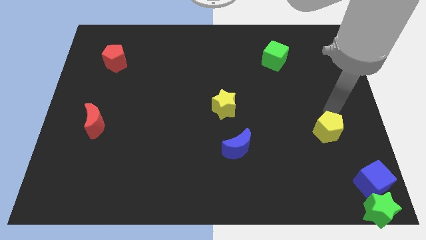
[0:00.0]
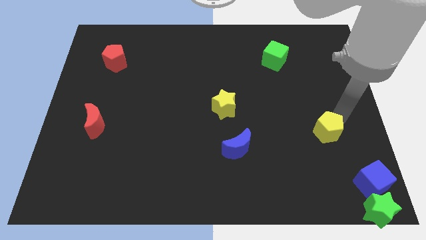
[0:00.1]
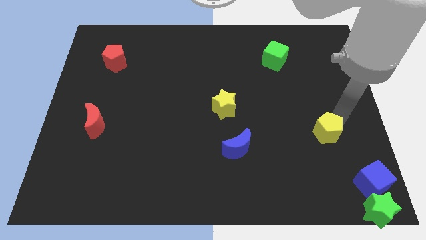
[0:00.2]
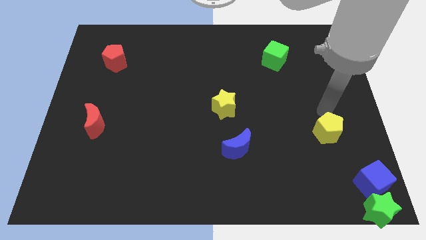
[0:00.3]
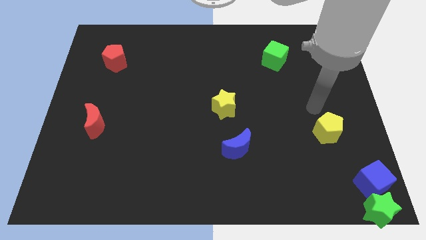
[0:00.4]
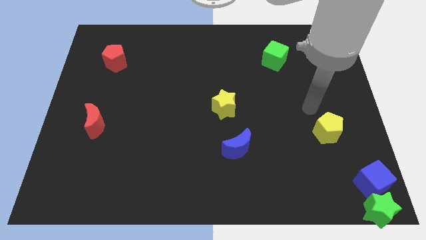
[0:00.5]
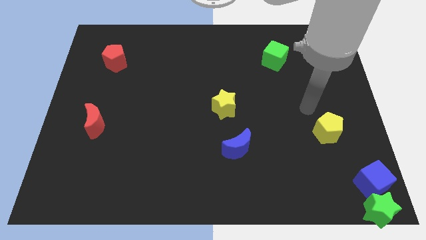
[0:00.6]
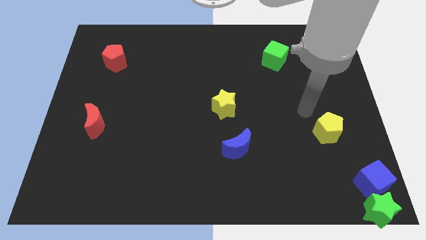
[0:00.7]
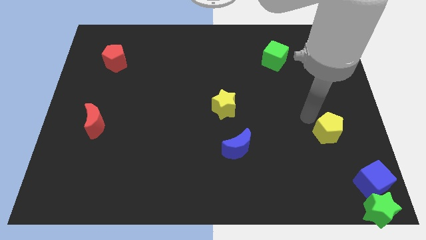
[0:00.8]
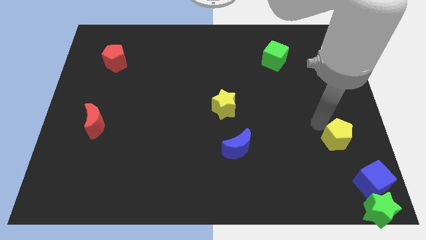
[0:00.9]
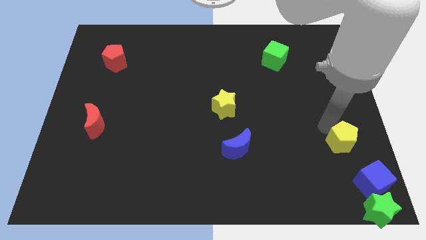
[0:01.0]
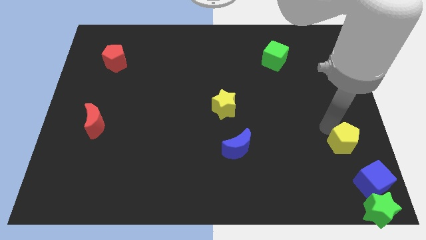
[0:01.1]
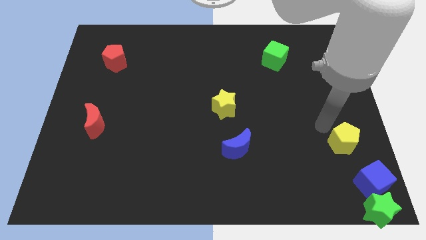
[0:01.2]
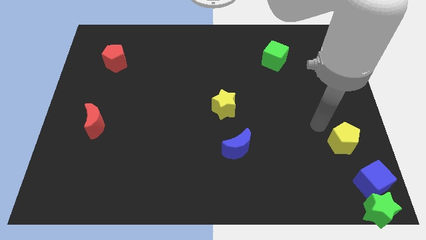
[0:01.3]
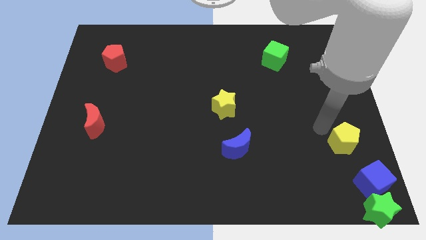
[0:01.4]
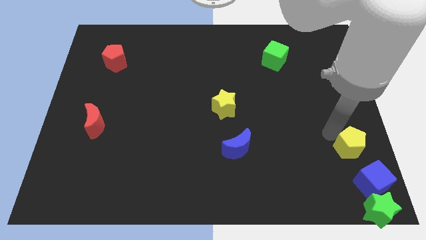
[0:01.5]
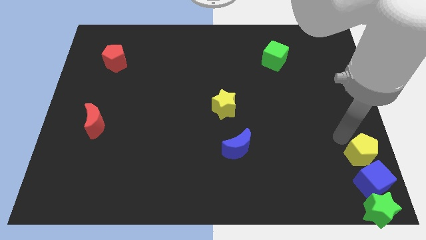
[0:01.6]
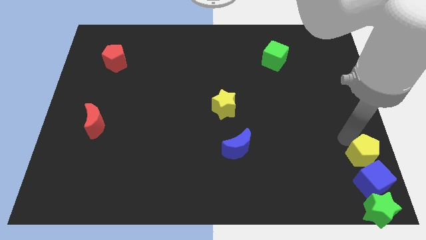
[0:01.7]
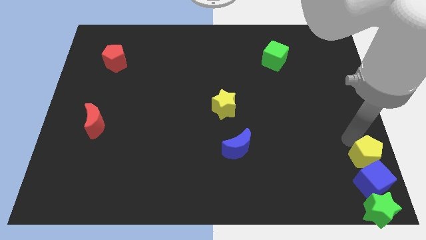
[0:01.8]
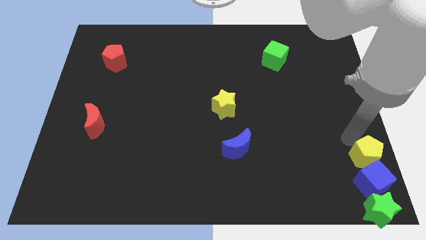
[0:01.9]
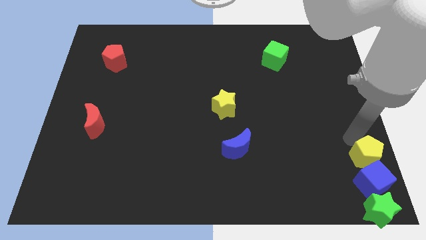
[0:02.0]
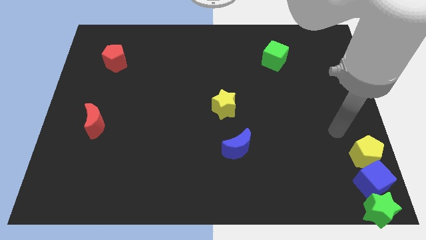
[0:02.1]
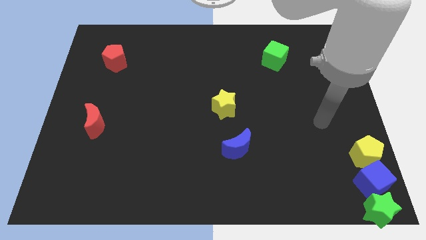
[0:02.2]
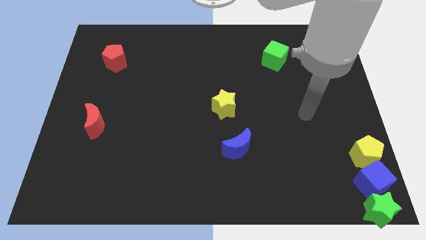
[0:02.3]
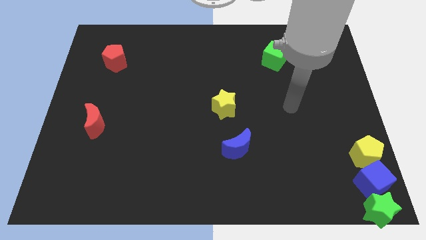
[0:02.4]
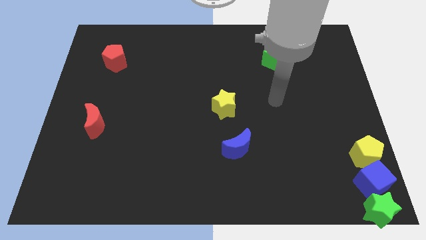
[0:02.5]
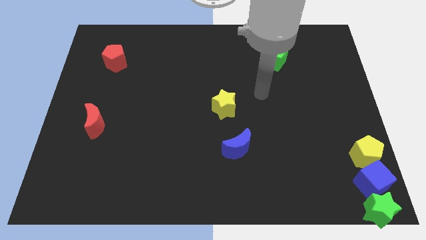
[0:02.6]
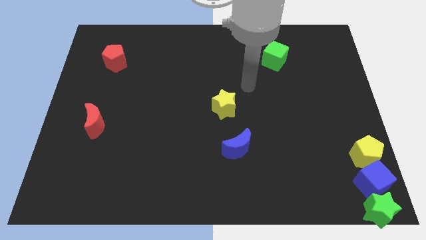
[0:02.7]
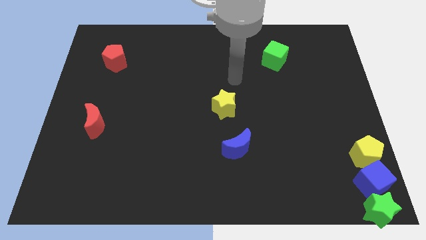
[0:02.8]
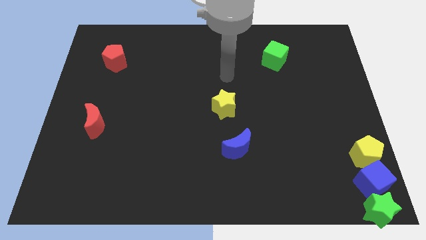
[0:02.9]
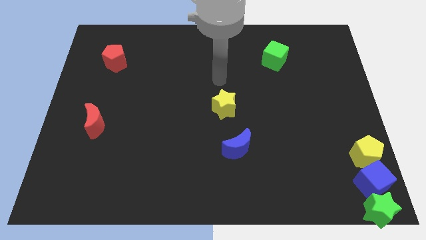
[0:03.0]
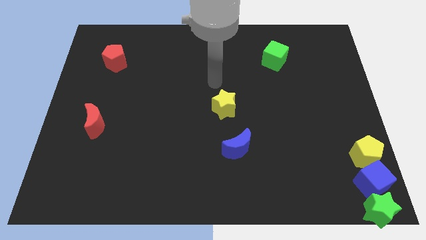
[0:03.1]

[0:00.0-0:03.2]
move the yellow pentagon to the top side of the blue cube

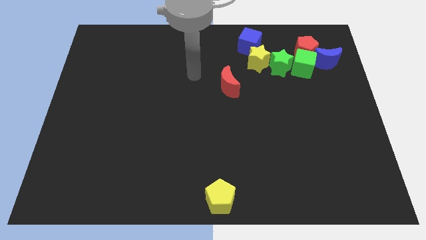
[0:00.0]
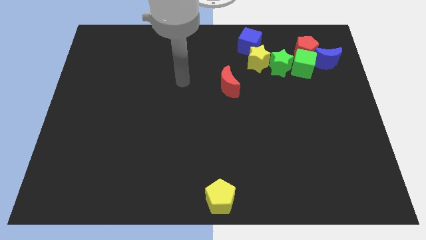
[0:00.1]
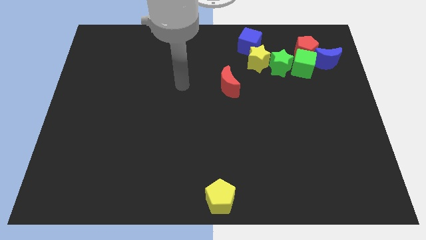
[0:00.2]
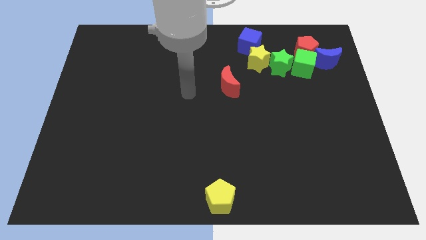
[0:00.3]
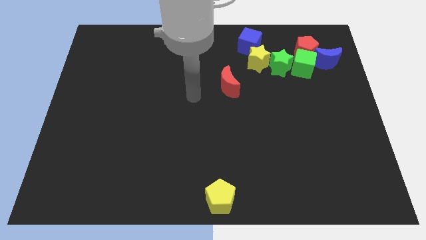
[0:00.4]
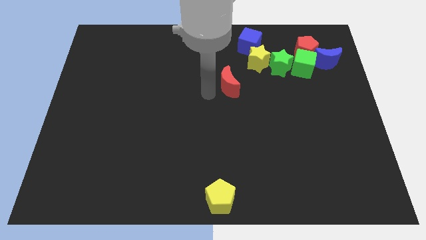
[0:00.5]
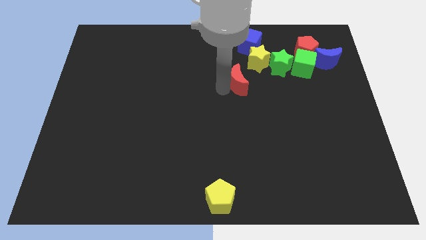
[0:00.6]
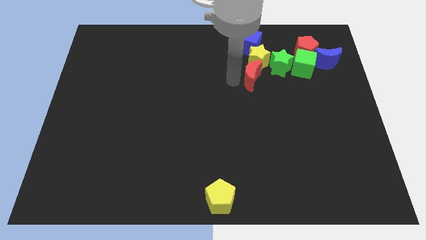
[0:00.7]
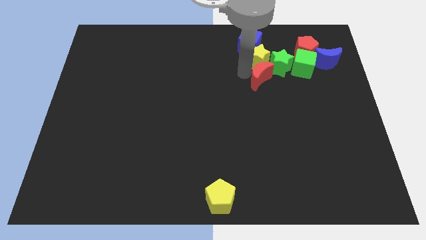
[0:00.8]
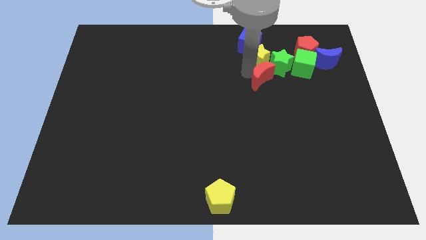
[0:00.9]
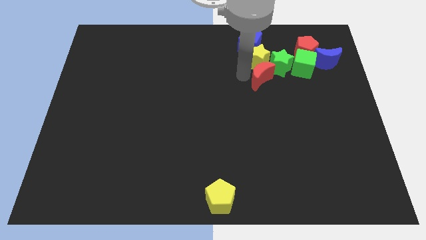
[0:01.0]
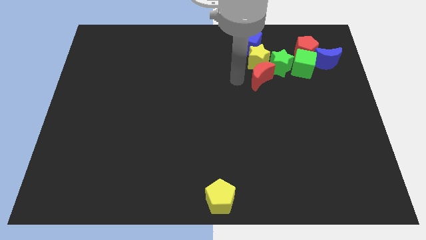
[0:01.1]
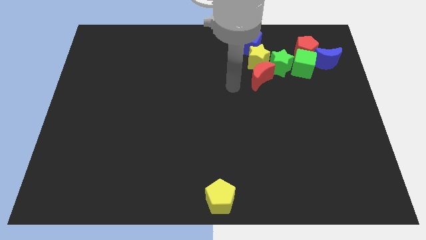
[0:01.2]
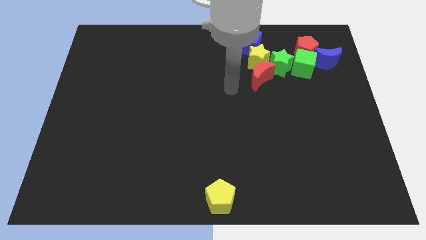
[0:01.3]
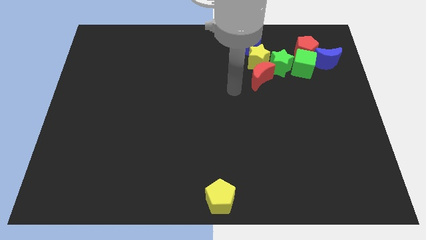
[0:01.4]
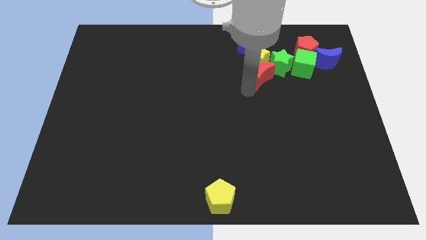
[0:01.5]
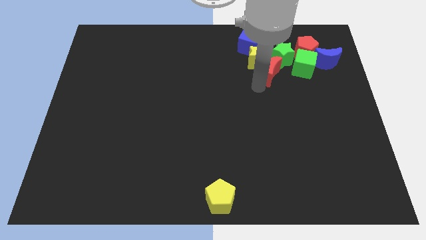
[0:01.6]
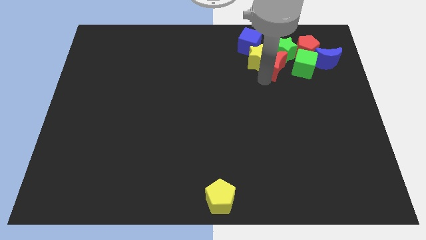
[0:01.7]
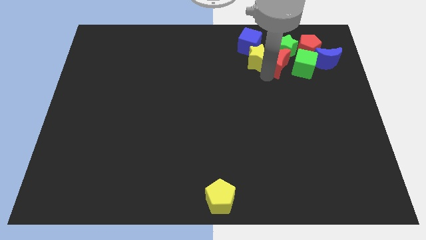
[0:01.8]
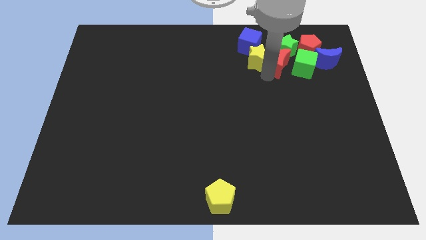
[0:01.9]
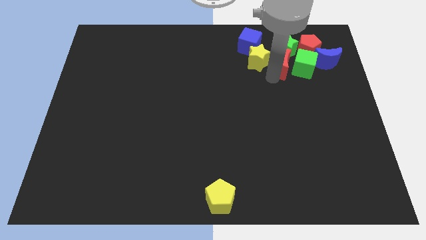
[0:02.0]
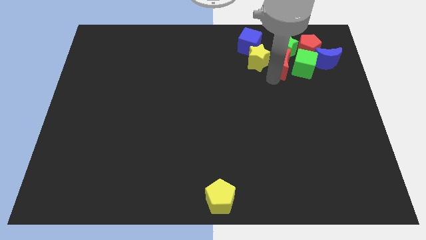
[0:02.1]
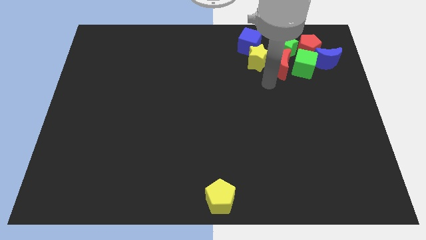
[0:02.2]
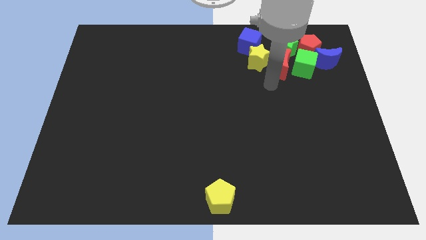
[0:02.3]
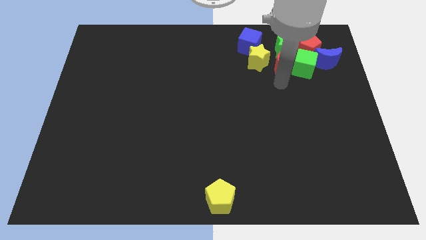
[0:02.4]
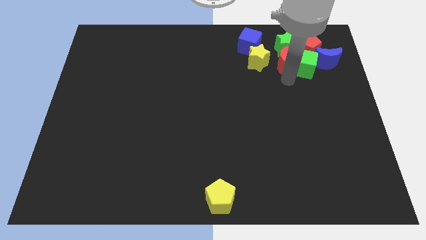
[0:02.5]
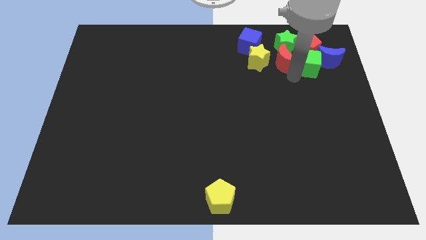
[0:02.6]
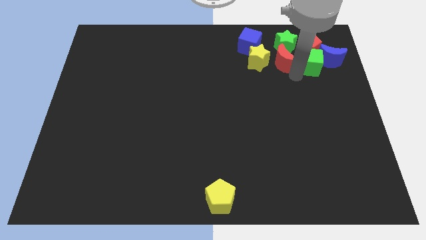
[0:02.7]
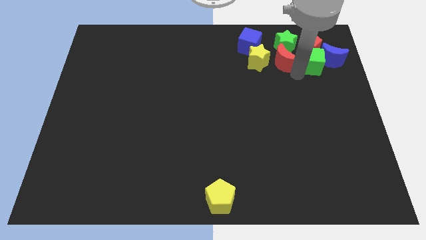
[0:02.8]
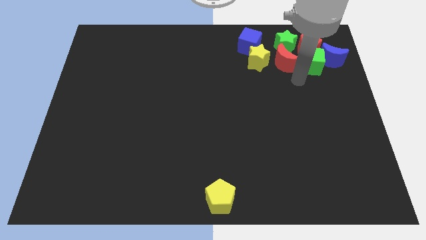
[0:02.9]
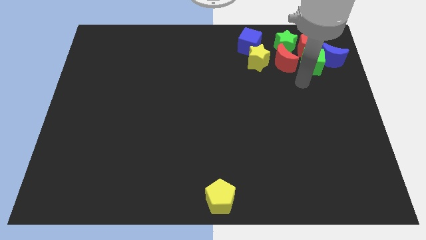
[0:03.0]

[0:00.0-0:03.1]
move the red moon into the green star

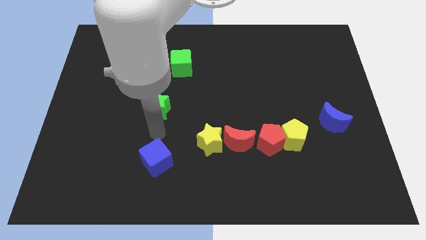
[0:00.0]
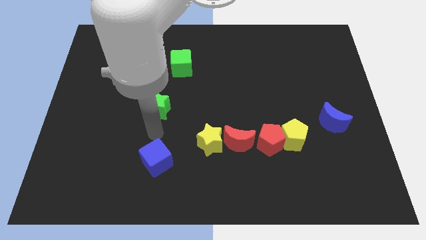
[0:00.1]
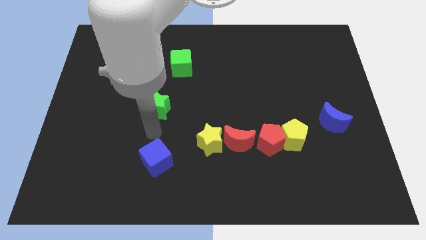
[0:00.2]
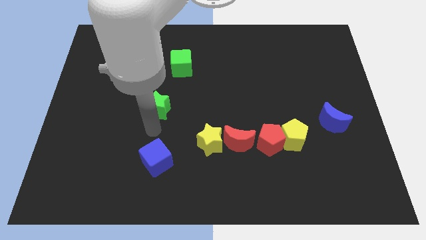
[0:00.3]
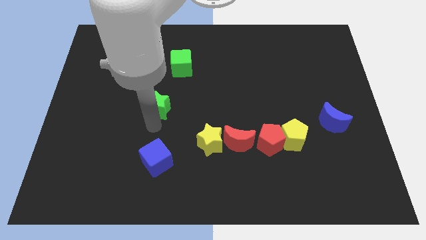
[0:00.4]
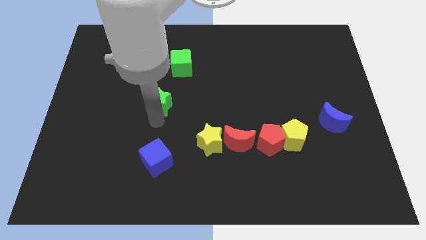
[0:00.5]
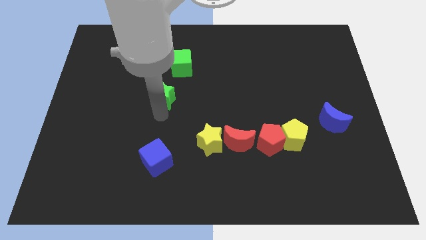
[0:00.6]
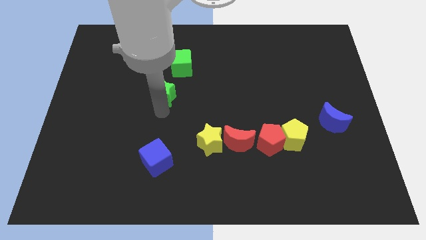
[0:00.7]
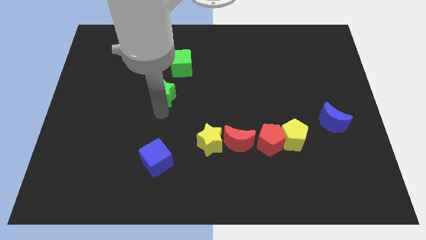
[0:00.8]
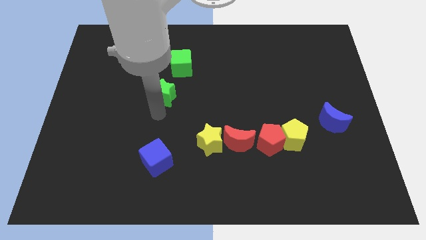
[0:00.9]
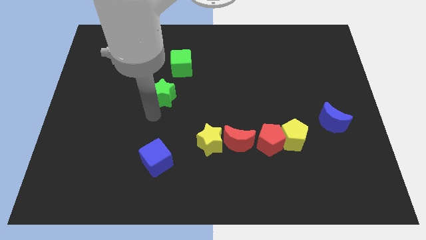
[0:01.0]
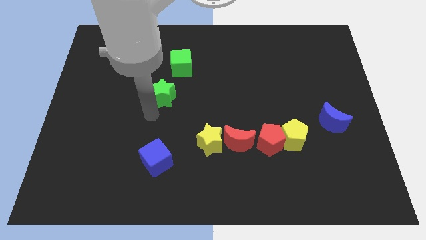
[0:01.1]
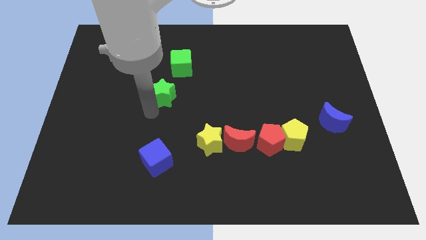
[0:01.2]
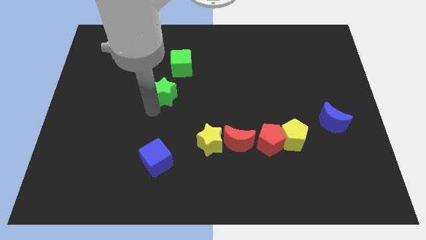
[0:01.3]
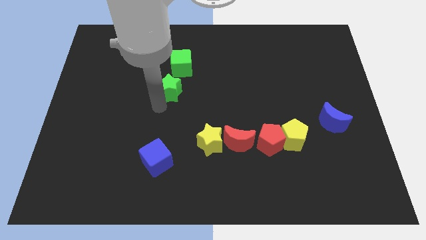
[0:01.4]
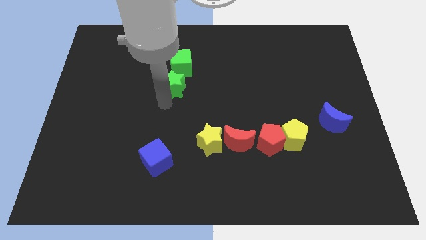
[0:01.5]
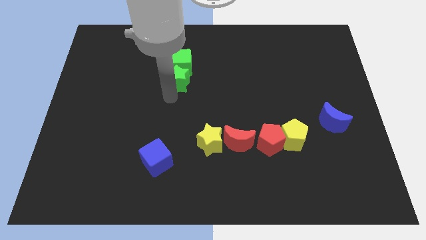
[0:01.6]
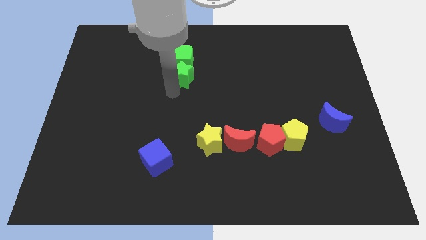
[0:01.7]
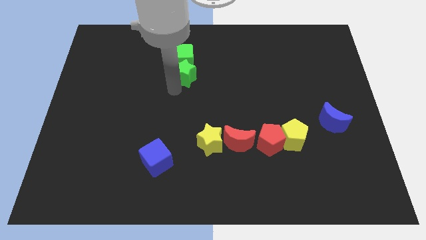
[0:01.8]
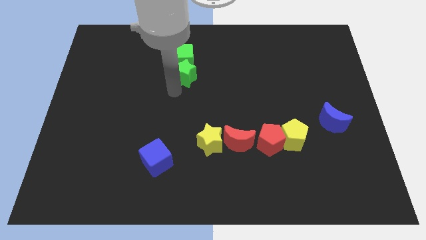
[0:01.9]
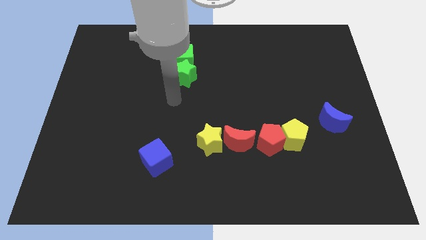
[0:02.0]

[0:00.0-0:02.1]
push the green star to the bottom side of the green cube

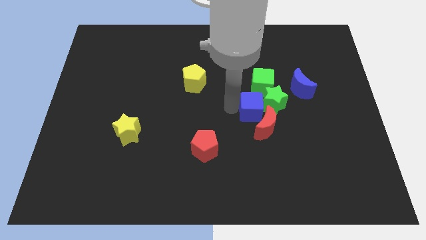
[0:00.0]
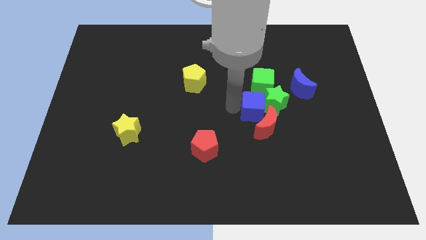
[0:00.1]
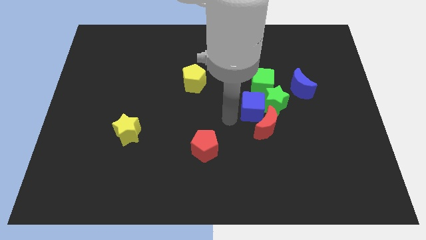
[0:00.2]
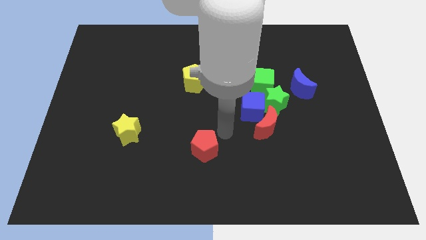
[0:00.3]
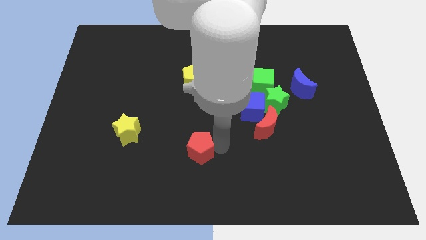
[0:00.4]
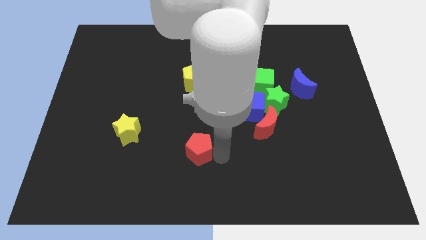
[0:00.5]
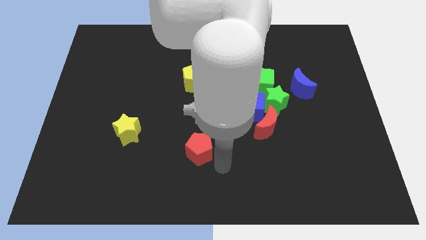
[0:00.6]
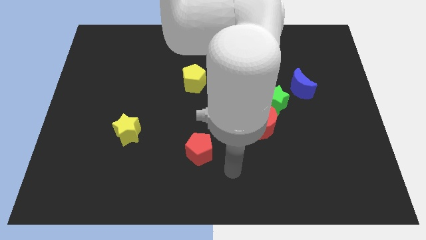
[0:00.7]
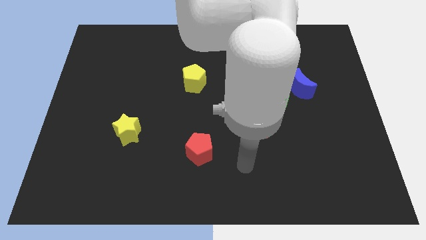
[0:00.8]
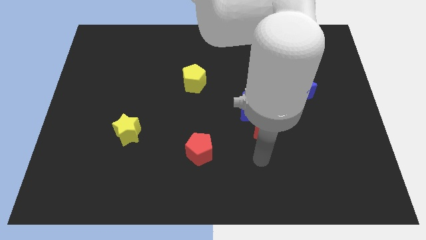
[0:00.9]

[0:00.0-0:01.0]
move the red pentagon slightly
